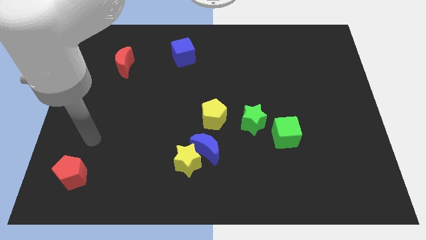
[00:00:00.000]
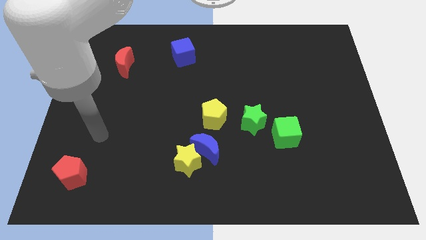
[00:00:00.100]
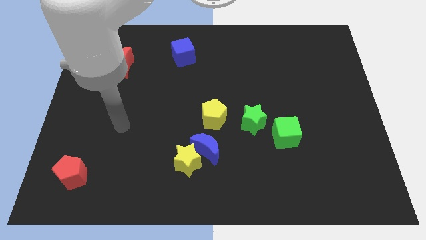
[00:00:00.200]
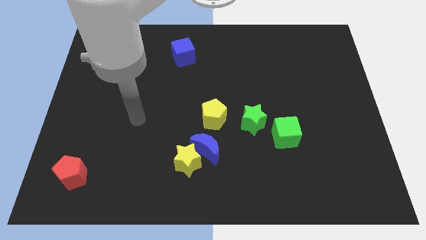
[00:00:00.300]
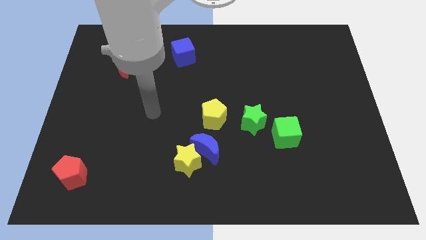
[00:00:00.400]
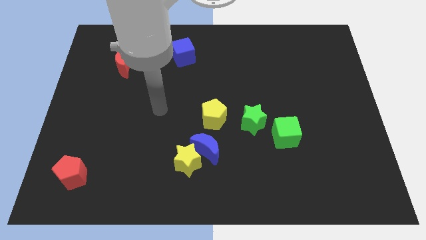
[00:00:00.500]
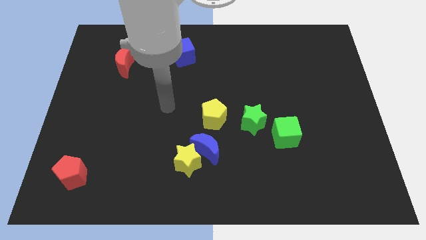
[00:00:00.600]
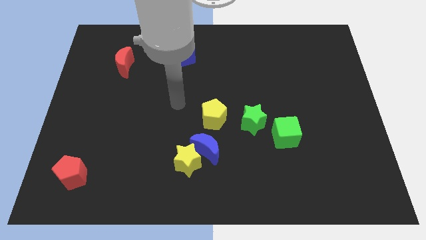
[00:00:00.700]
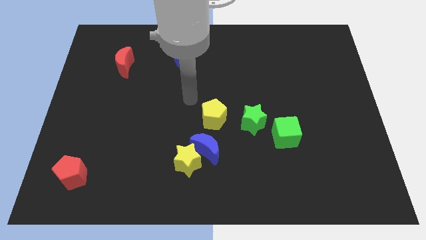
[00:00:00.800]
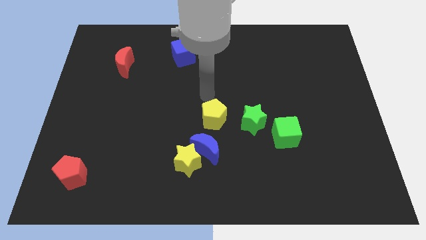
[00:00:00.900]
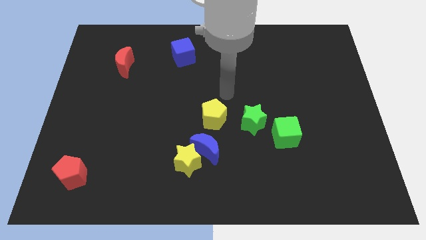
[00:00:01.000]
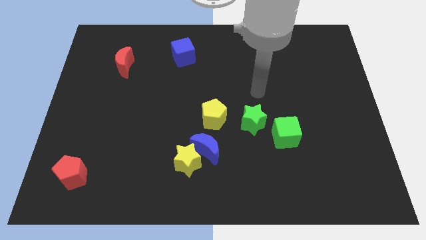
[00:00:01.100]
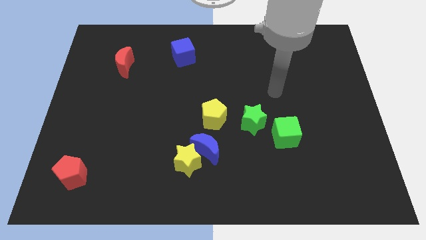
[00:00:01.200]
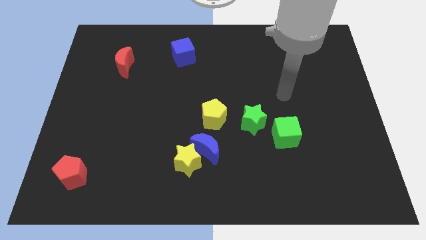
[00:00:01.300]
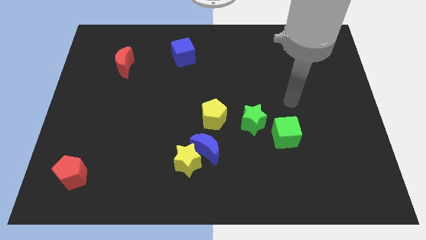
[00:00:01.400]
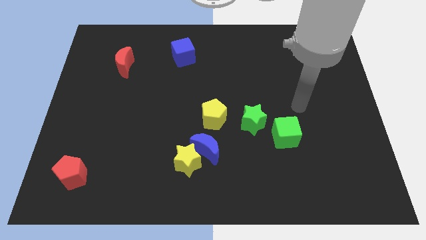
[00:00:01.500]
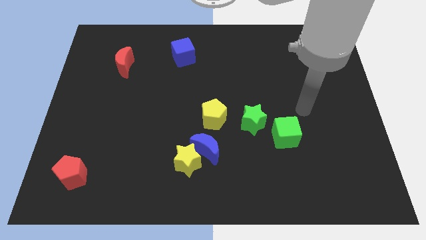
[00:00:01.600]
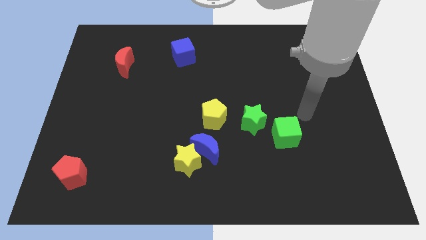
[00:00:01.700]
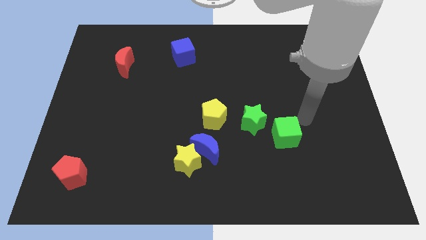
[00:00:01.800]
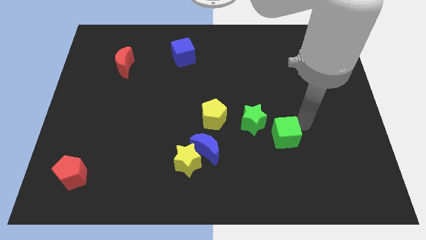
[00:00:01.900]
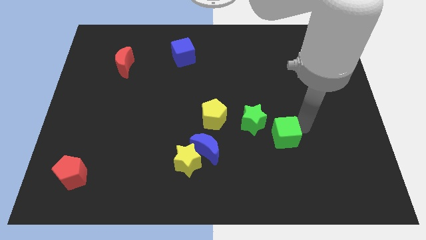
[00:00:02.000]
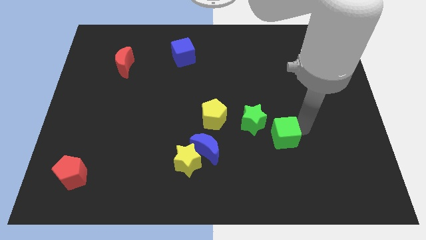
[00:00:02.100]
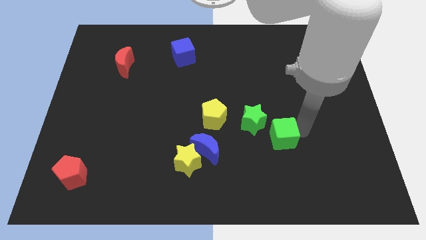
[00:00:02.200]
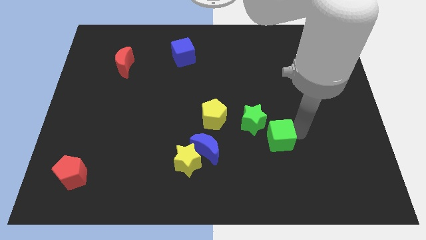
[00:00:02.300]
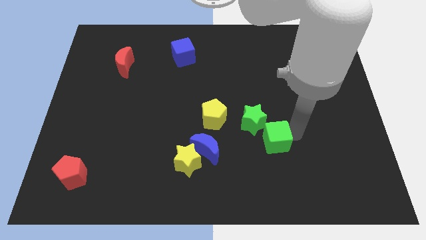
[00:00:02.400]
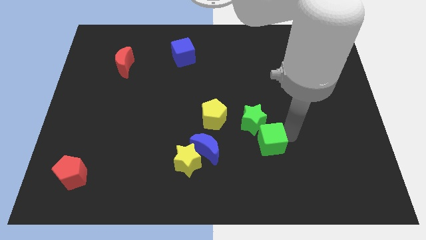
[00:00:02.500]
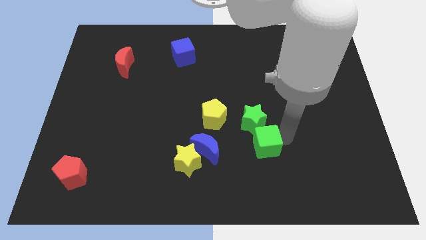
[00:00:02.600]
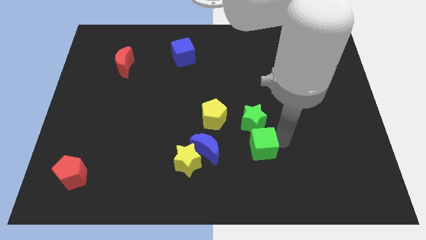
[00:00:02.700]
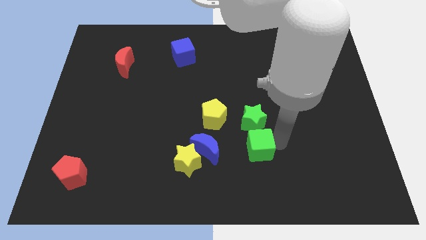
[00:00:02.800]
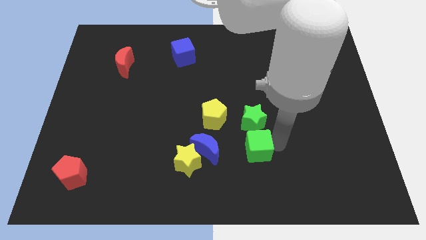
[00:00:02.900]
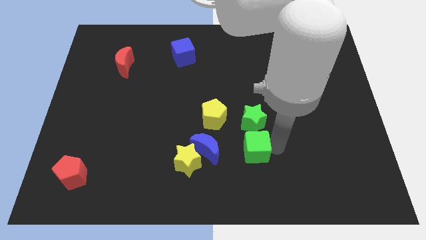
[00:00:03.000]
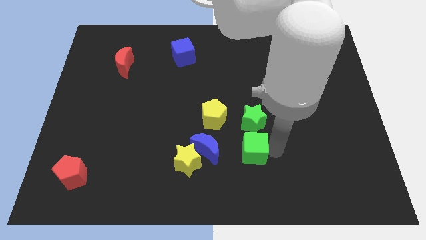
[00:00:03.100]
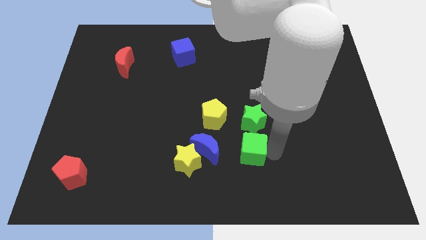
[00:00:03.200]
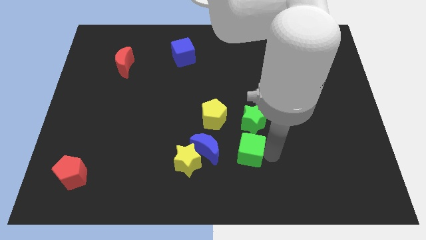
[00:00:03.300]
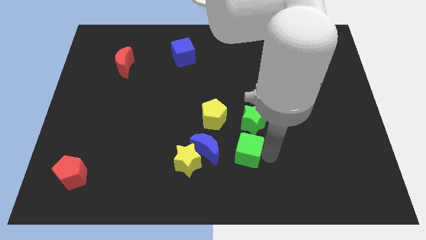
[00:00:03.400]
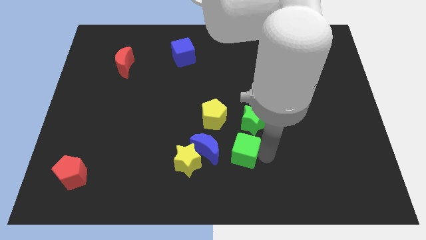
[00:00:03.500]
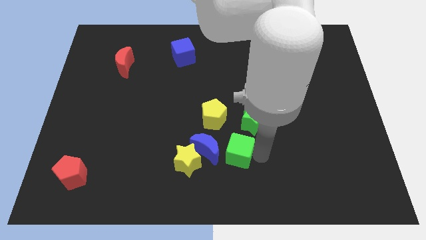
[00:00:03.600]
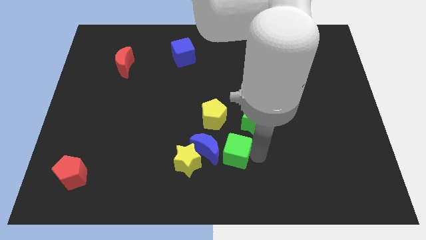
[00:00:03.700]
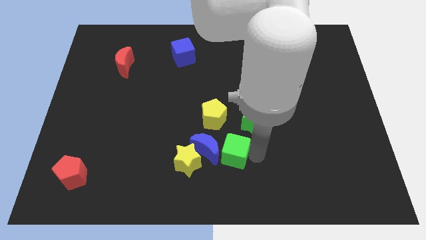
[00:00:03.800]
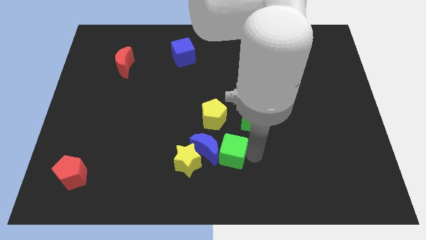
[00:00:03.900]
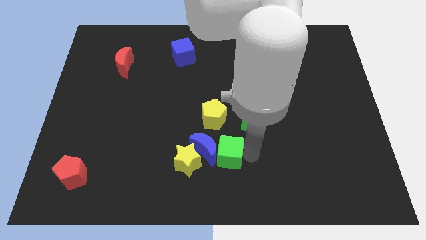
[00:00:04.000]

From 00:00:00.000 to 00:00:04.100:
put the green cube next to the blue moon

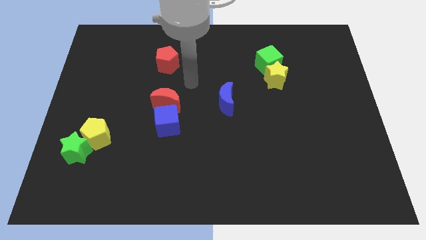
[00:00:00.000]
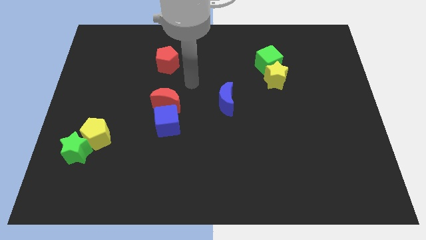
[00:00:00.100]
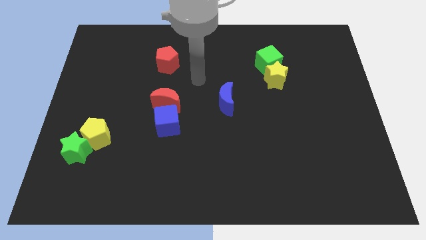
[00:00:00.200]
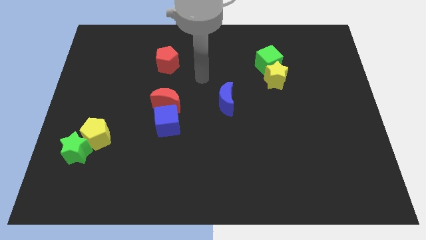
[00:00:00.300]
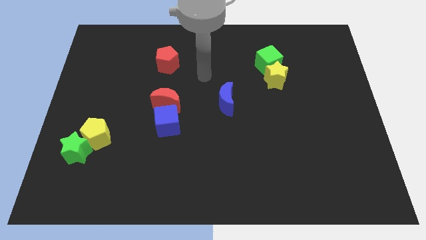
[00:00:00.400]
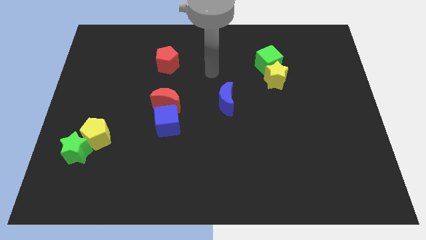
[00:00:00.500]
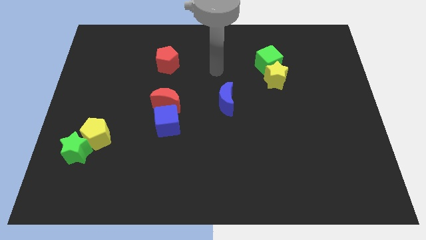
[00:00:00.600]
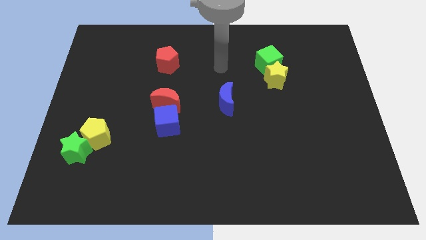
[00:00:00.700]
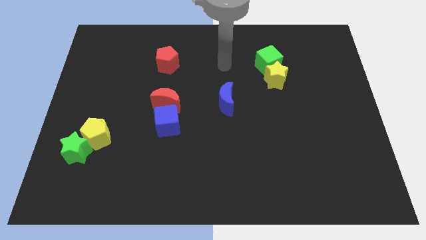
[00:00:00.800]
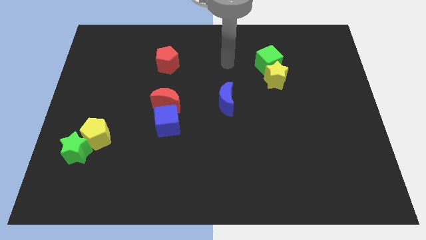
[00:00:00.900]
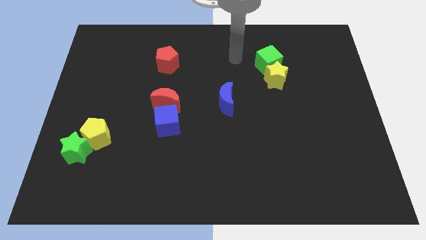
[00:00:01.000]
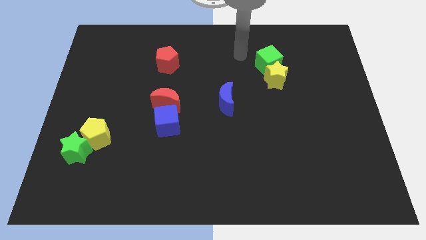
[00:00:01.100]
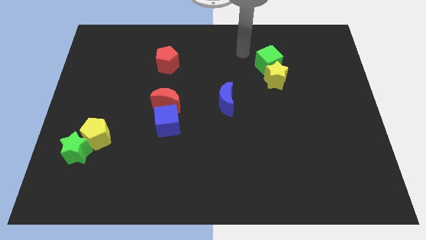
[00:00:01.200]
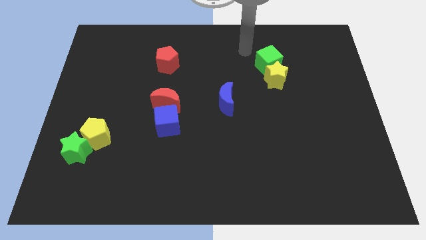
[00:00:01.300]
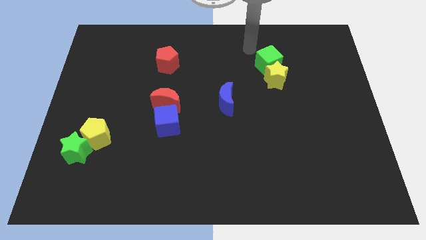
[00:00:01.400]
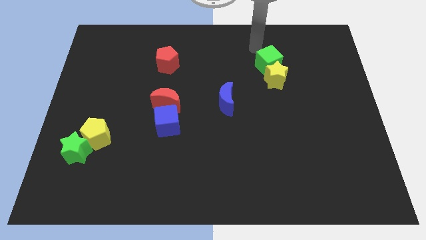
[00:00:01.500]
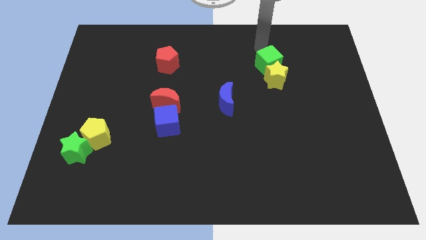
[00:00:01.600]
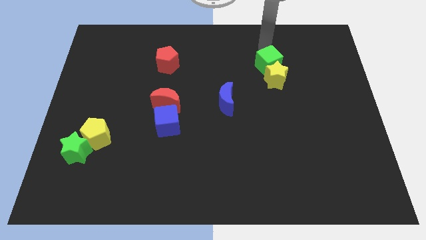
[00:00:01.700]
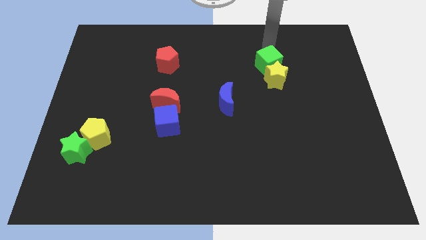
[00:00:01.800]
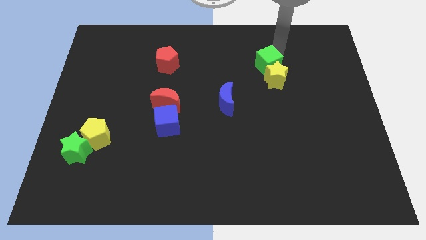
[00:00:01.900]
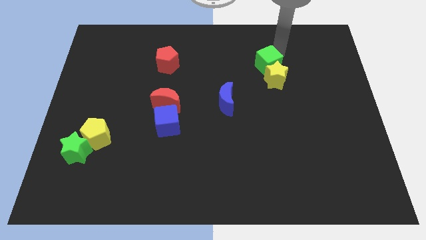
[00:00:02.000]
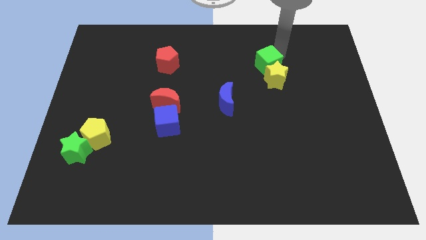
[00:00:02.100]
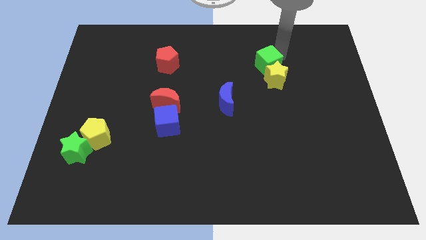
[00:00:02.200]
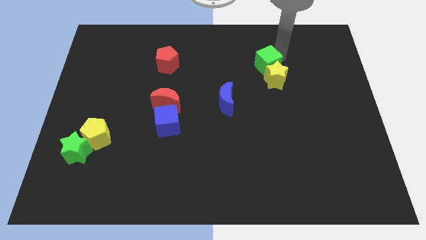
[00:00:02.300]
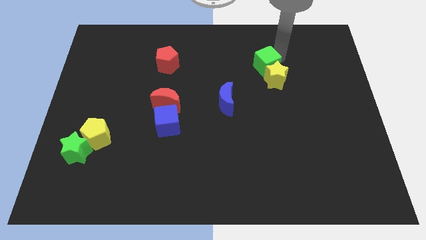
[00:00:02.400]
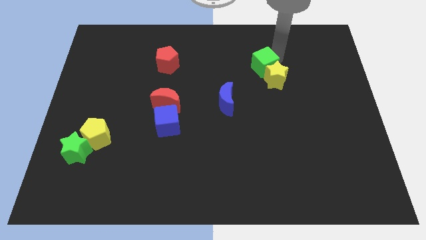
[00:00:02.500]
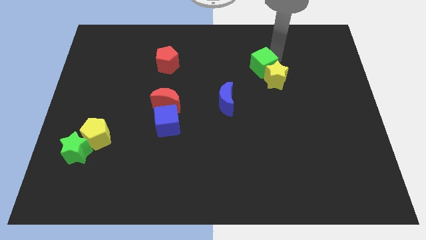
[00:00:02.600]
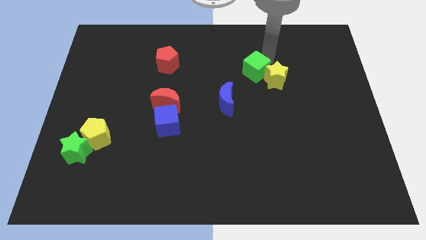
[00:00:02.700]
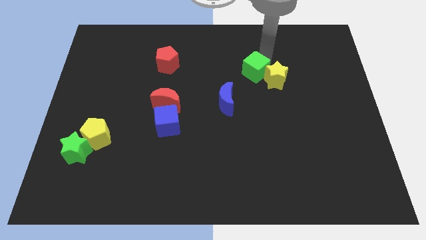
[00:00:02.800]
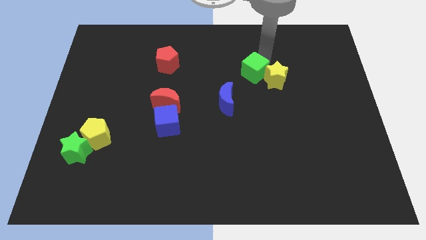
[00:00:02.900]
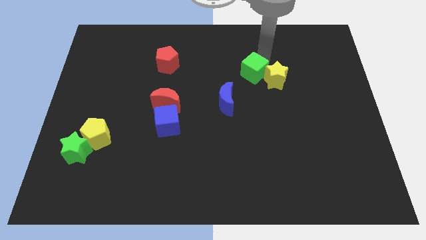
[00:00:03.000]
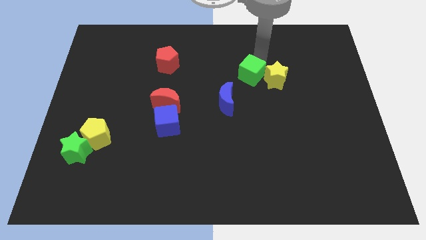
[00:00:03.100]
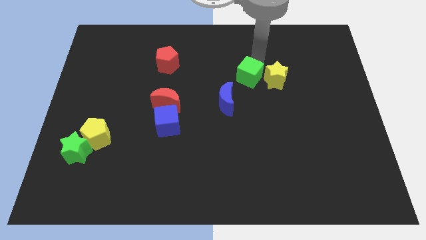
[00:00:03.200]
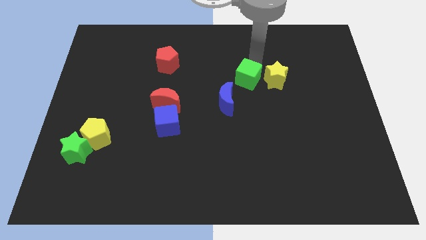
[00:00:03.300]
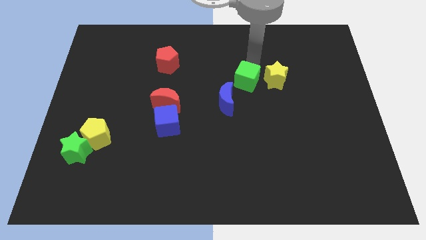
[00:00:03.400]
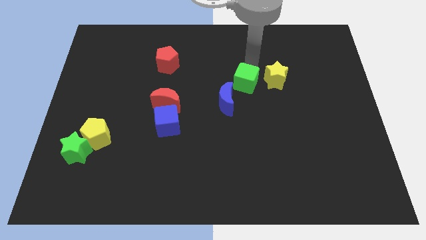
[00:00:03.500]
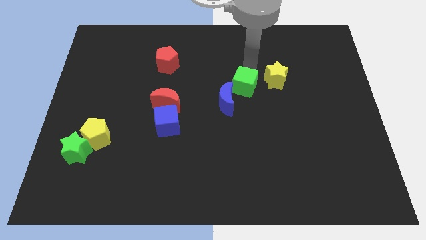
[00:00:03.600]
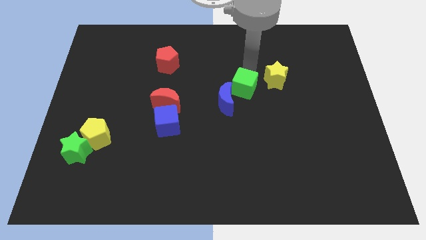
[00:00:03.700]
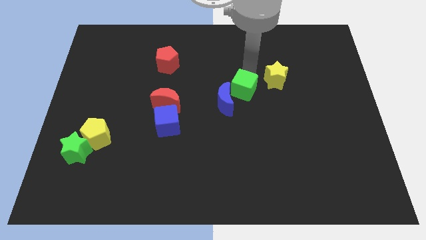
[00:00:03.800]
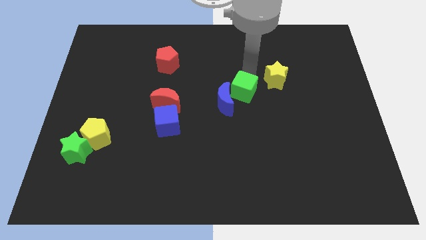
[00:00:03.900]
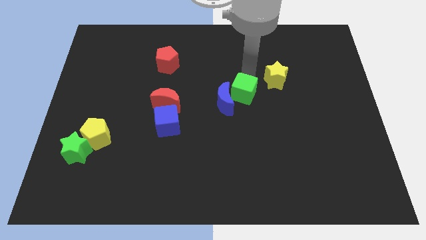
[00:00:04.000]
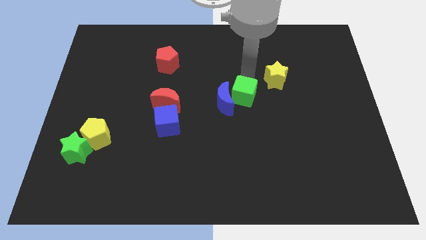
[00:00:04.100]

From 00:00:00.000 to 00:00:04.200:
push the green cube towards the blue moon
